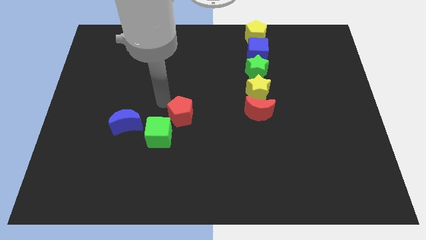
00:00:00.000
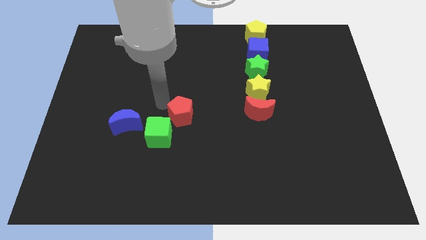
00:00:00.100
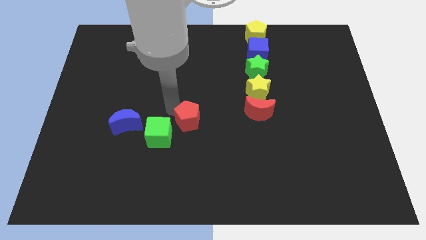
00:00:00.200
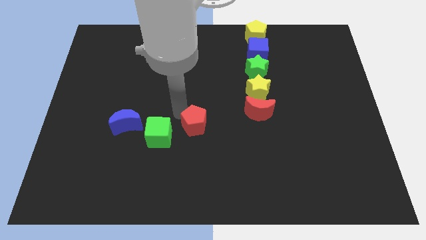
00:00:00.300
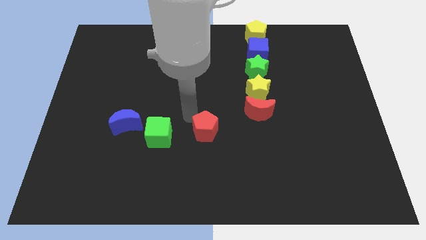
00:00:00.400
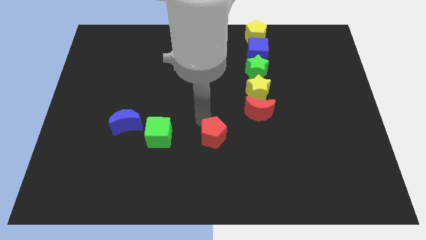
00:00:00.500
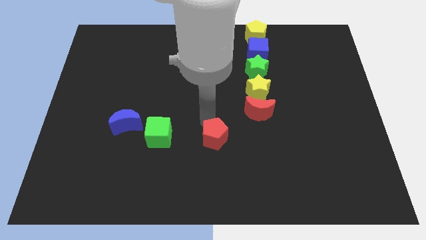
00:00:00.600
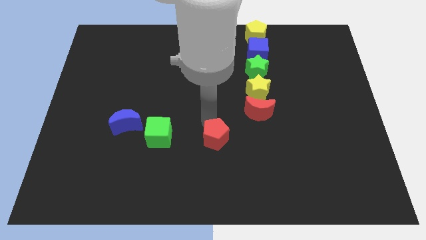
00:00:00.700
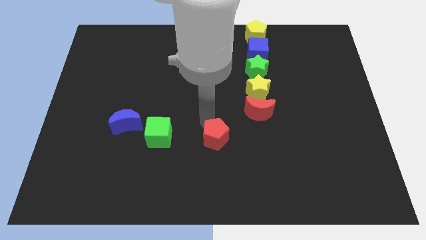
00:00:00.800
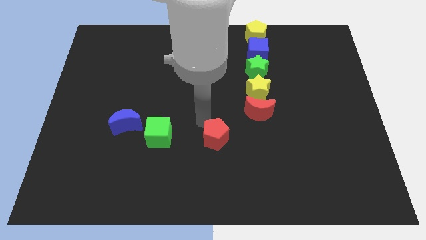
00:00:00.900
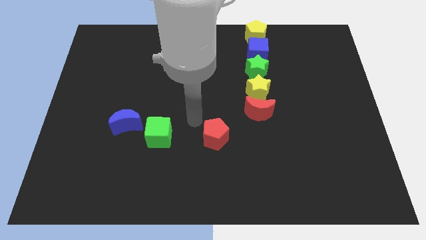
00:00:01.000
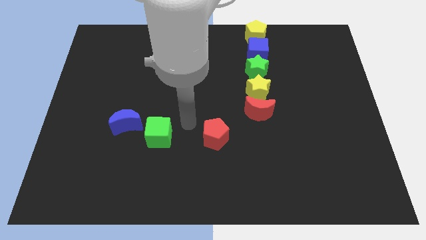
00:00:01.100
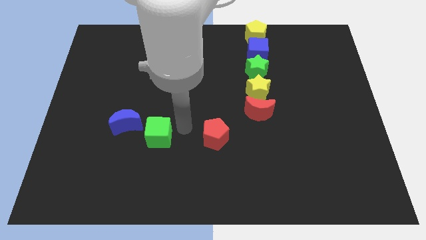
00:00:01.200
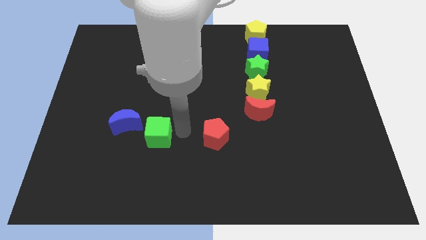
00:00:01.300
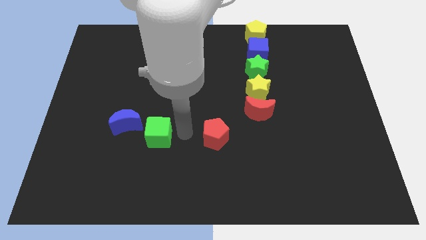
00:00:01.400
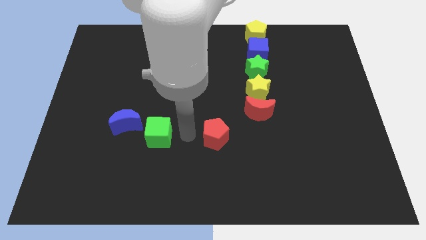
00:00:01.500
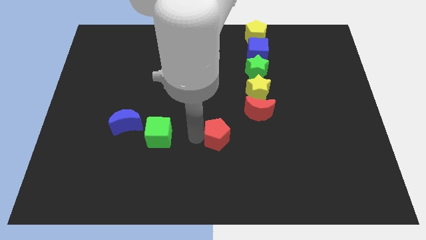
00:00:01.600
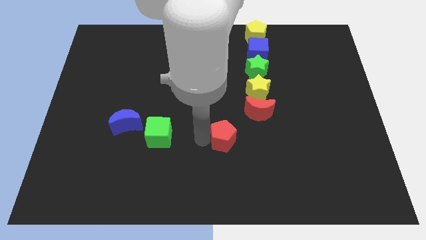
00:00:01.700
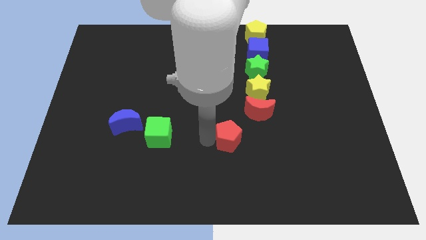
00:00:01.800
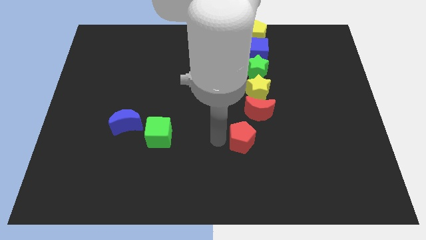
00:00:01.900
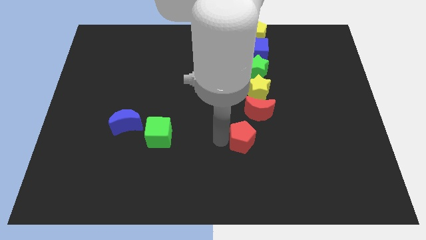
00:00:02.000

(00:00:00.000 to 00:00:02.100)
separate red pentagon from green cube

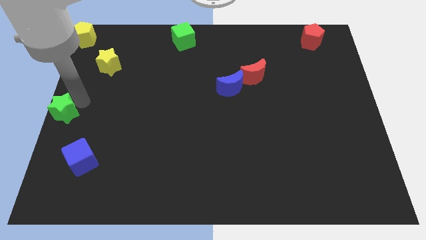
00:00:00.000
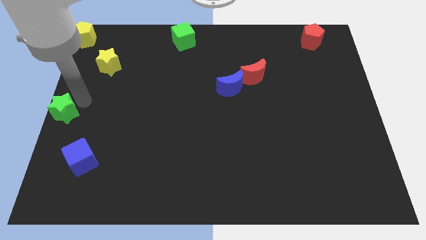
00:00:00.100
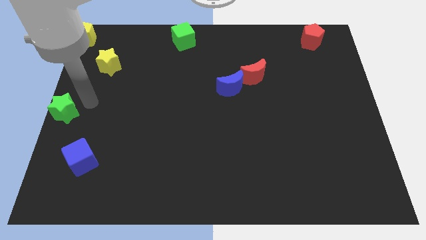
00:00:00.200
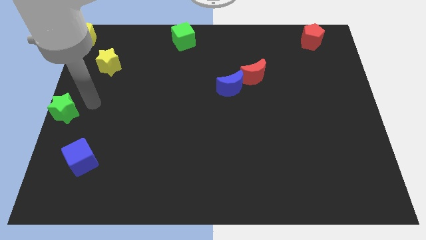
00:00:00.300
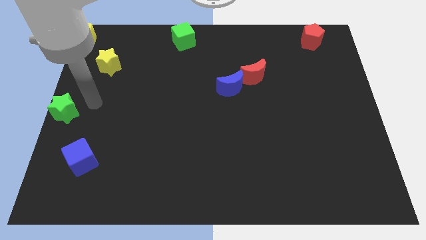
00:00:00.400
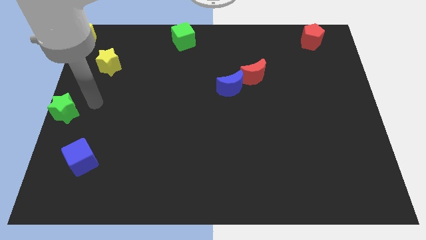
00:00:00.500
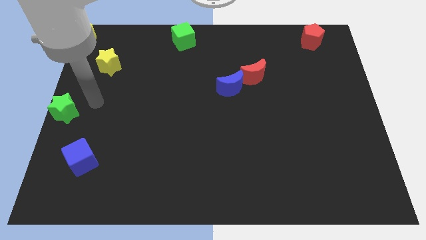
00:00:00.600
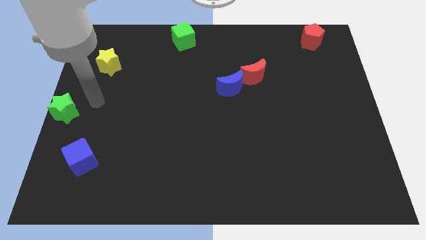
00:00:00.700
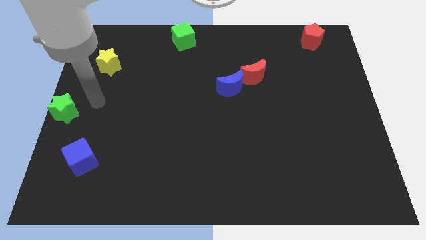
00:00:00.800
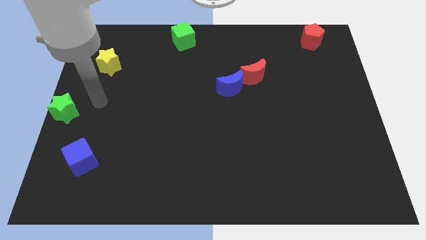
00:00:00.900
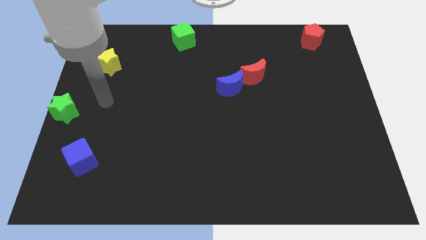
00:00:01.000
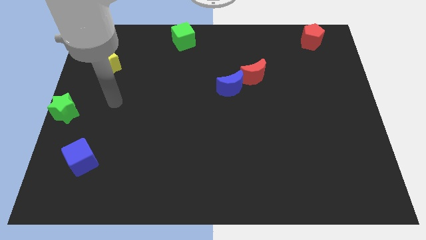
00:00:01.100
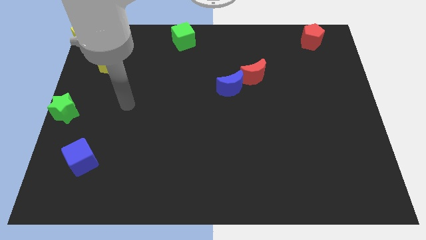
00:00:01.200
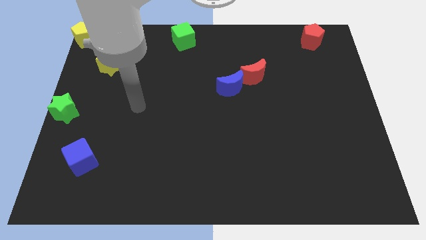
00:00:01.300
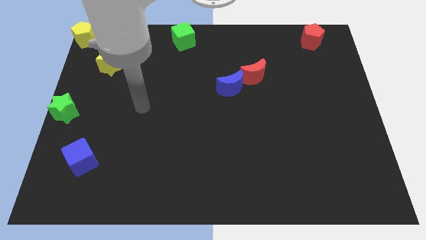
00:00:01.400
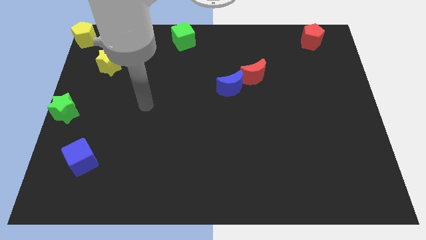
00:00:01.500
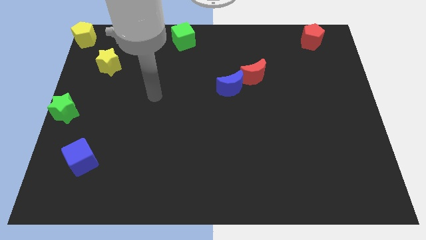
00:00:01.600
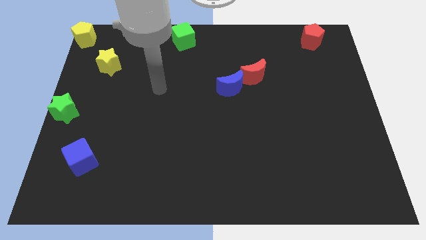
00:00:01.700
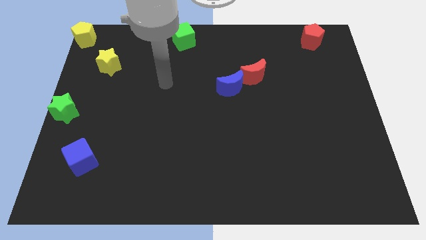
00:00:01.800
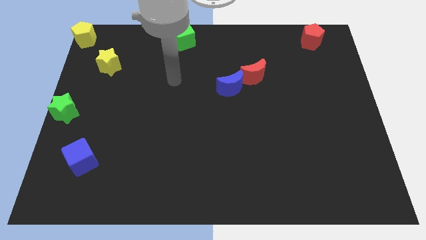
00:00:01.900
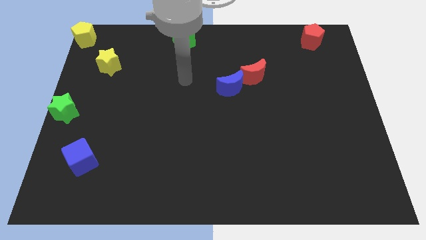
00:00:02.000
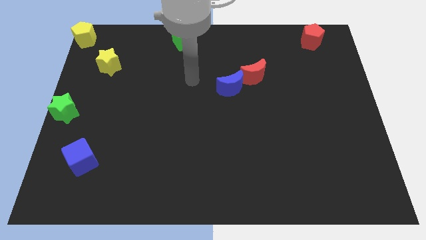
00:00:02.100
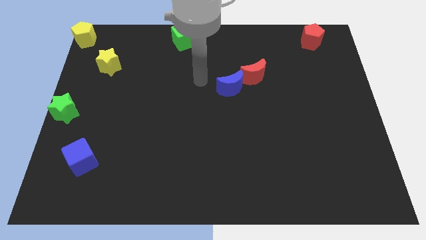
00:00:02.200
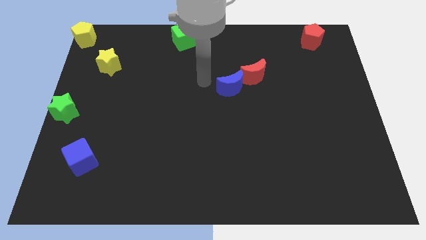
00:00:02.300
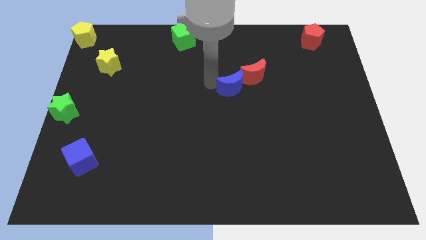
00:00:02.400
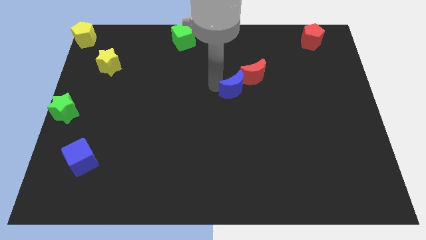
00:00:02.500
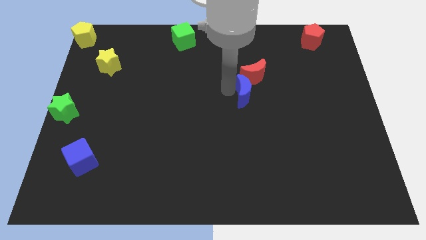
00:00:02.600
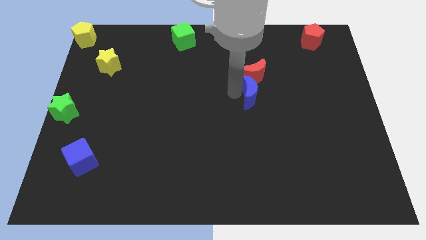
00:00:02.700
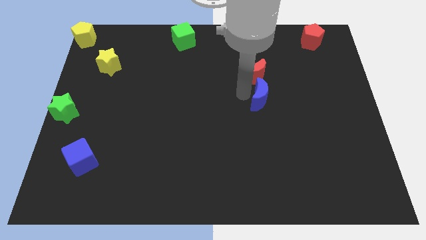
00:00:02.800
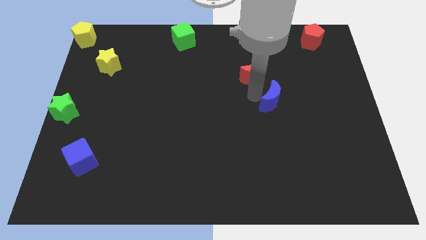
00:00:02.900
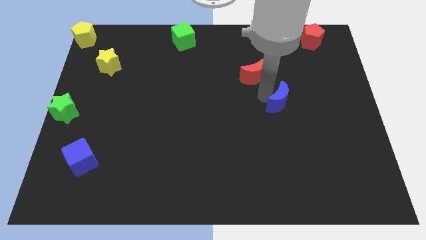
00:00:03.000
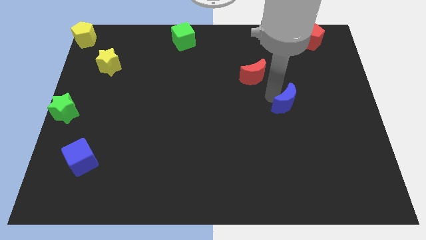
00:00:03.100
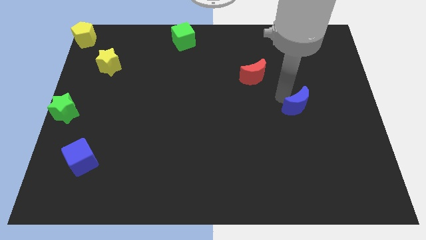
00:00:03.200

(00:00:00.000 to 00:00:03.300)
push the blue crescent diagnol to the red crescent

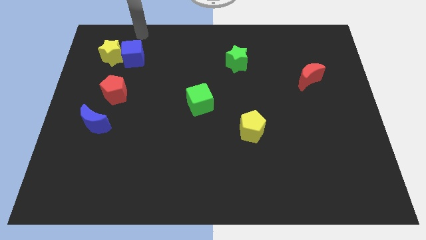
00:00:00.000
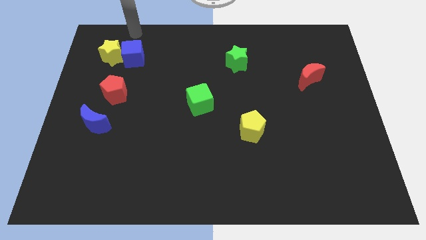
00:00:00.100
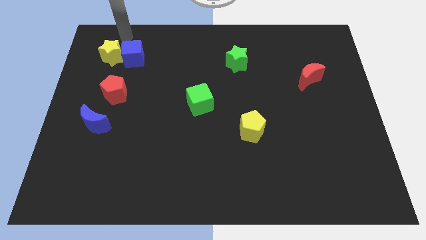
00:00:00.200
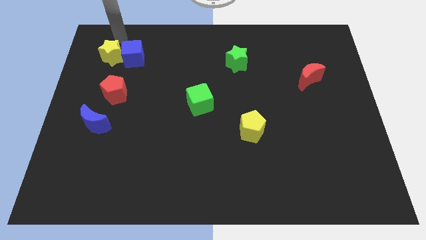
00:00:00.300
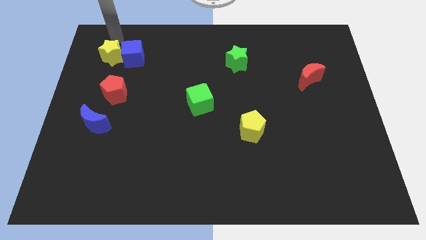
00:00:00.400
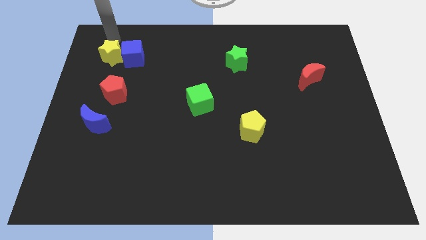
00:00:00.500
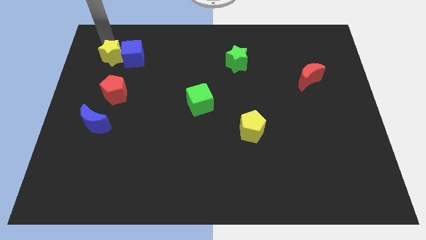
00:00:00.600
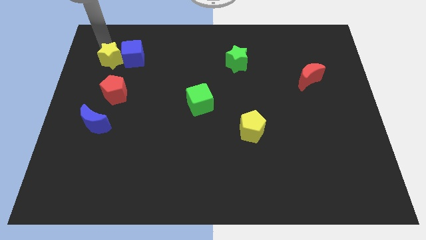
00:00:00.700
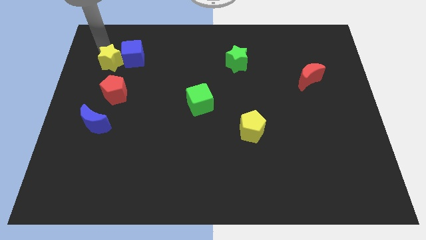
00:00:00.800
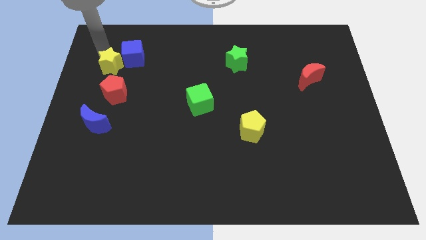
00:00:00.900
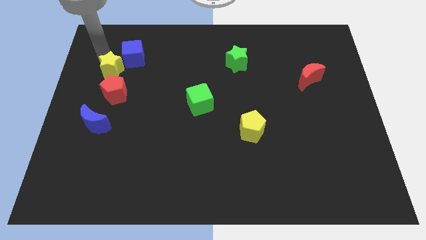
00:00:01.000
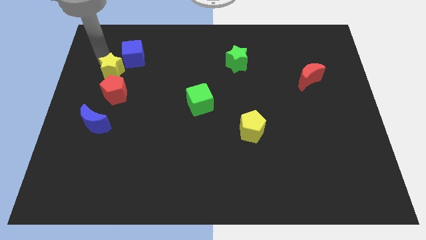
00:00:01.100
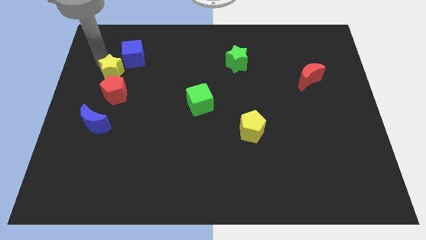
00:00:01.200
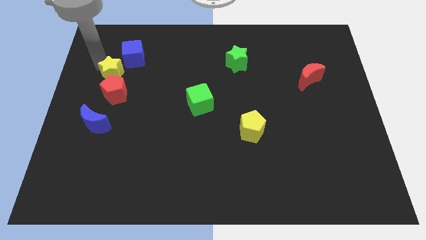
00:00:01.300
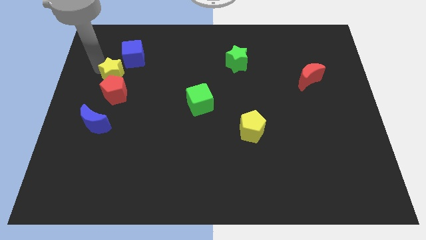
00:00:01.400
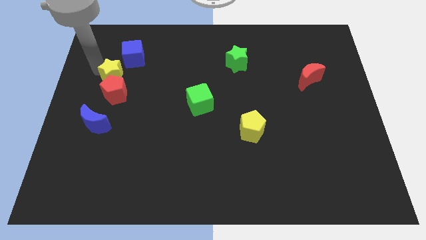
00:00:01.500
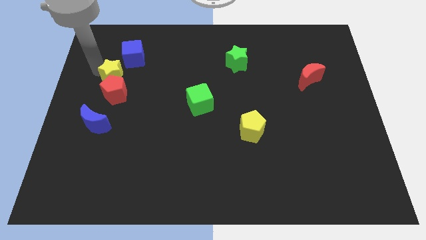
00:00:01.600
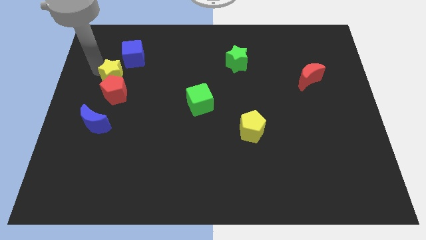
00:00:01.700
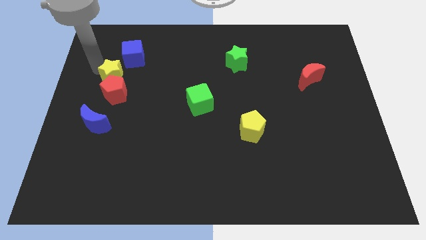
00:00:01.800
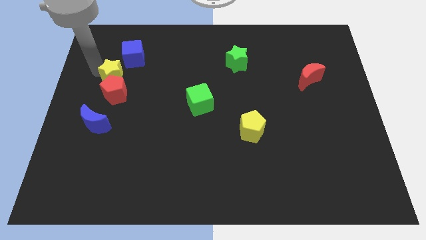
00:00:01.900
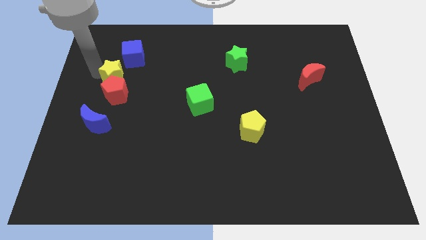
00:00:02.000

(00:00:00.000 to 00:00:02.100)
place the yellow star above the red pentagon

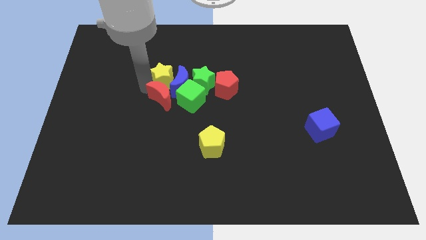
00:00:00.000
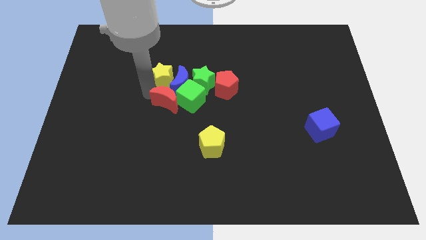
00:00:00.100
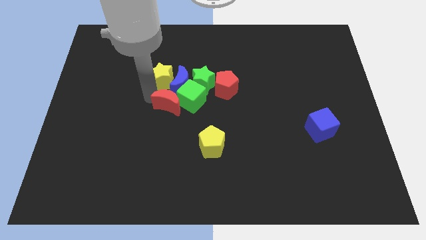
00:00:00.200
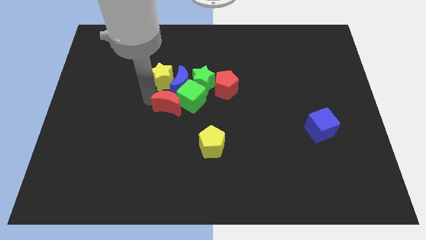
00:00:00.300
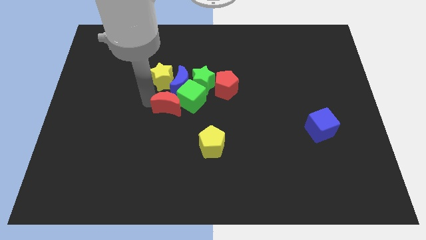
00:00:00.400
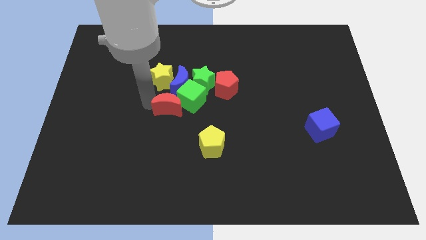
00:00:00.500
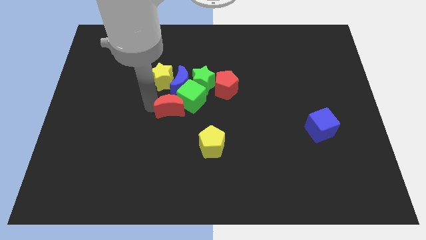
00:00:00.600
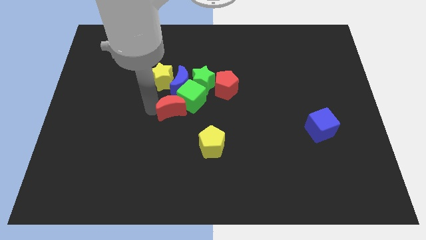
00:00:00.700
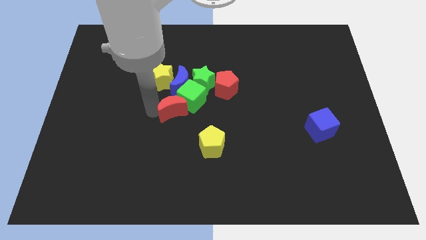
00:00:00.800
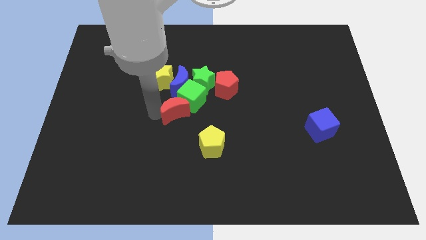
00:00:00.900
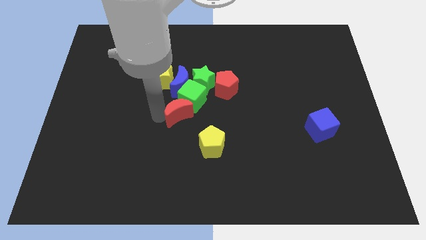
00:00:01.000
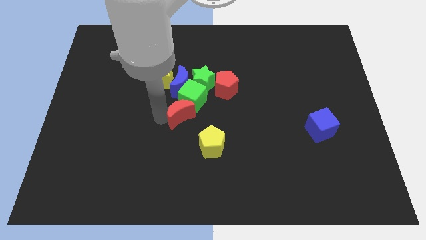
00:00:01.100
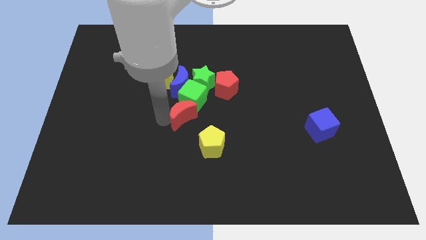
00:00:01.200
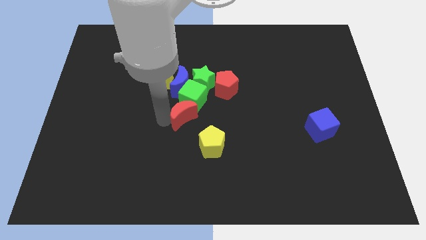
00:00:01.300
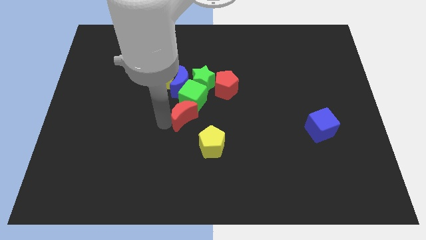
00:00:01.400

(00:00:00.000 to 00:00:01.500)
slide the red moon to the bottom left side of the green cube
